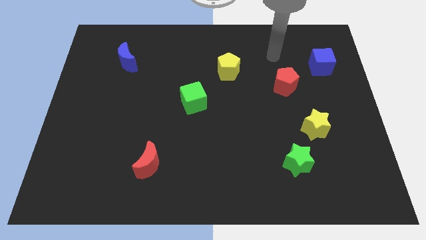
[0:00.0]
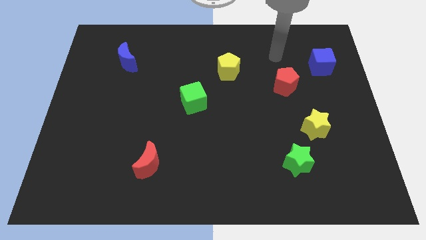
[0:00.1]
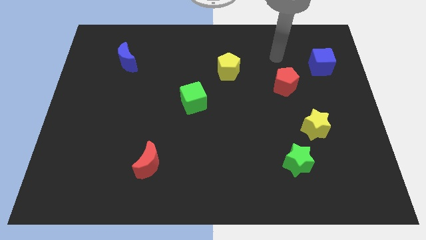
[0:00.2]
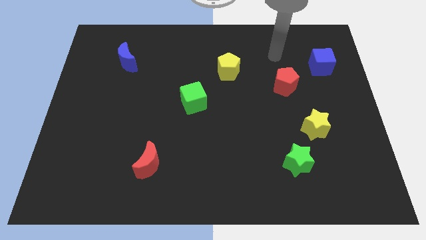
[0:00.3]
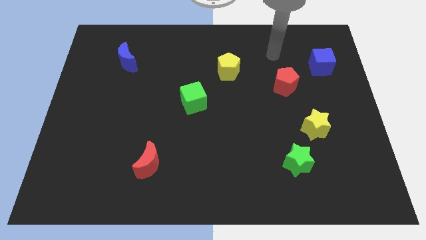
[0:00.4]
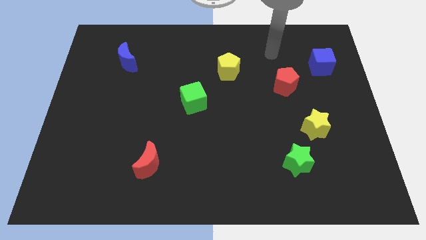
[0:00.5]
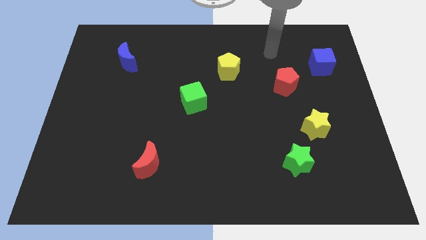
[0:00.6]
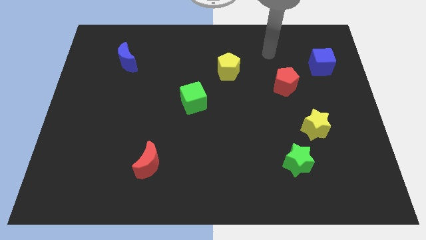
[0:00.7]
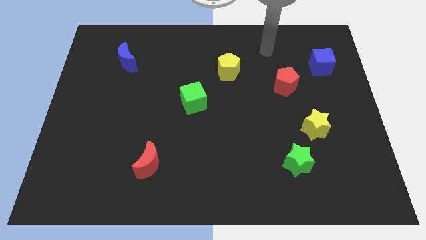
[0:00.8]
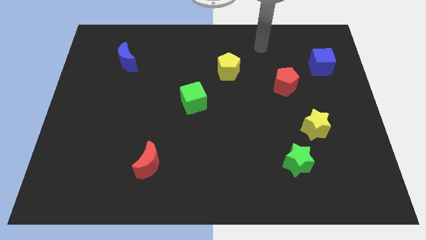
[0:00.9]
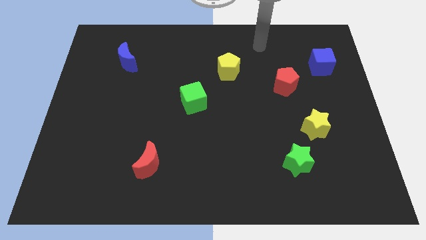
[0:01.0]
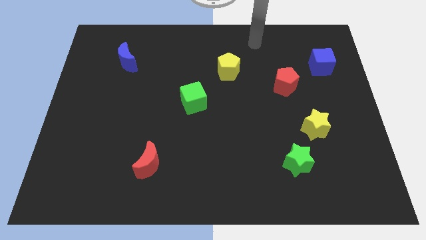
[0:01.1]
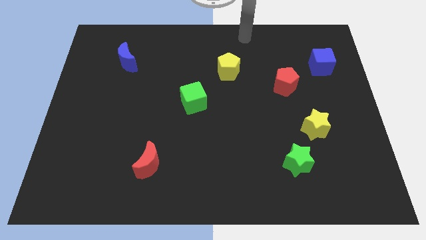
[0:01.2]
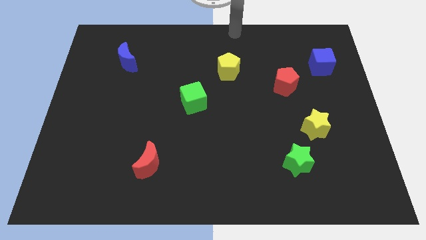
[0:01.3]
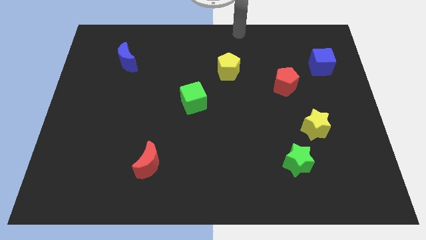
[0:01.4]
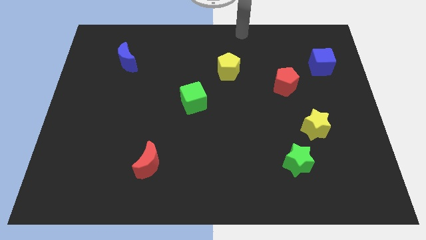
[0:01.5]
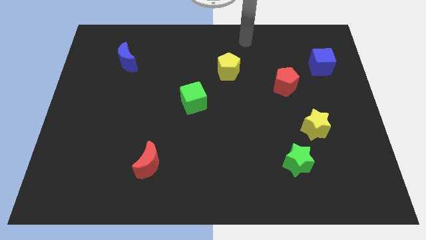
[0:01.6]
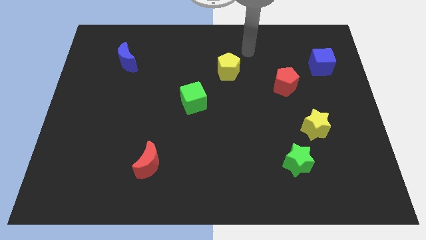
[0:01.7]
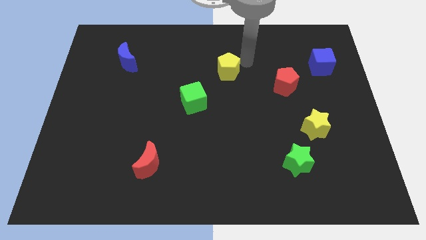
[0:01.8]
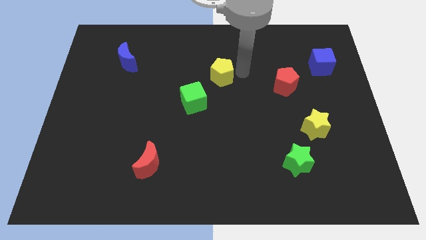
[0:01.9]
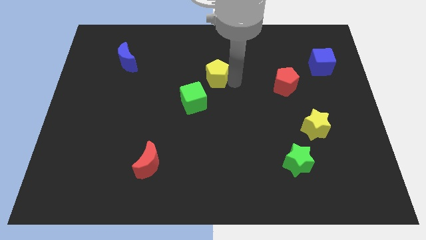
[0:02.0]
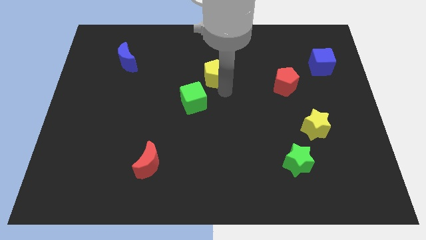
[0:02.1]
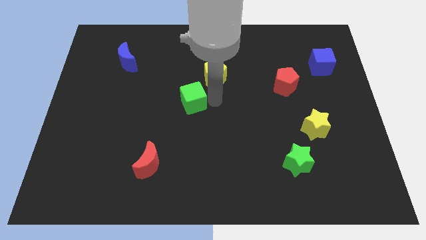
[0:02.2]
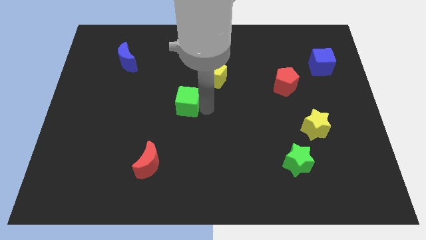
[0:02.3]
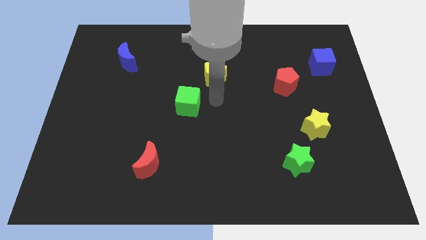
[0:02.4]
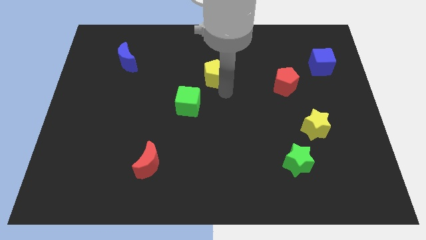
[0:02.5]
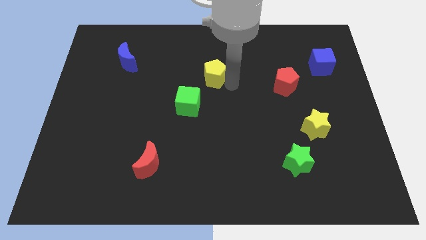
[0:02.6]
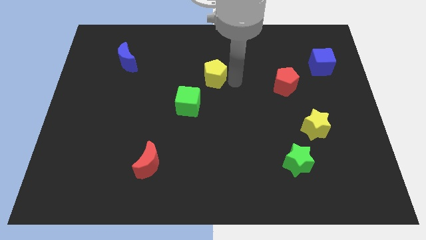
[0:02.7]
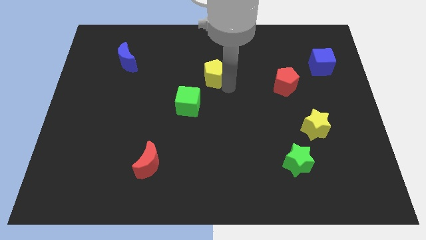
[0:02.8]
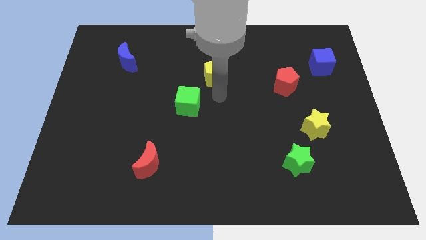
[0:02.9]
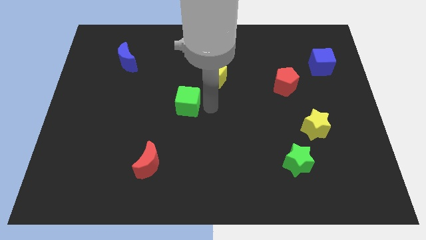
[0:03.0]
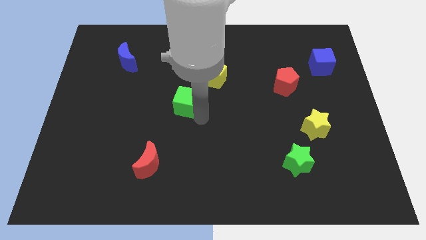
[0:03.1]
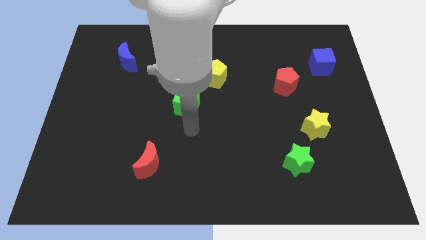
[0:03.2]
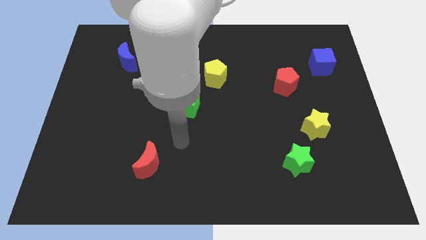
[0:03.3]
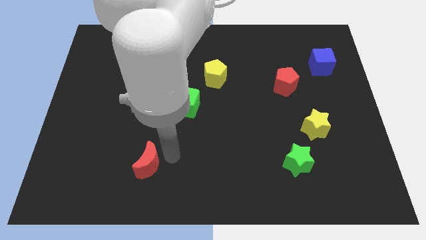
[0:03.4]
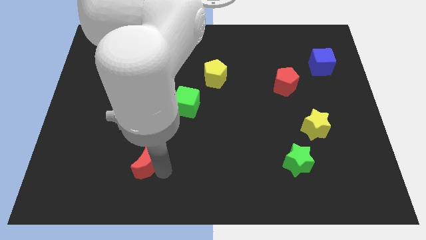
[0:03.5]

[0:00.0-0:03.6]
touch the right of the red moon

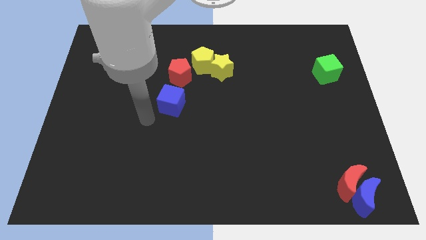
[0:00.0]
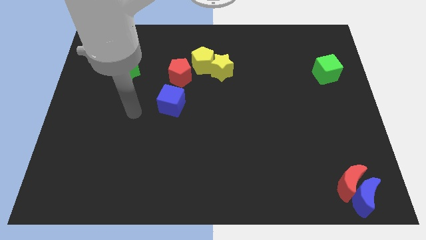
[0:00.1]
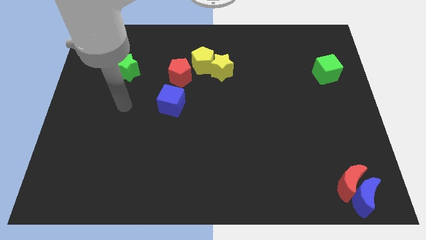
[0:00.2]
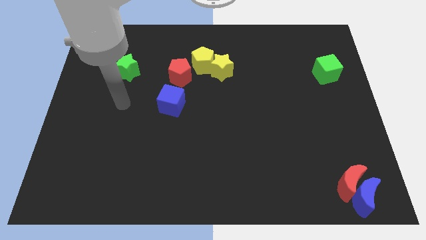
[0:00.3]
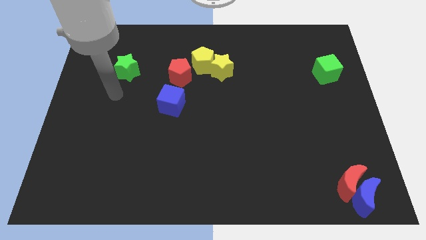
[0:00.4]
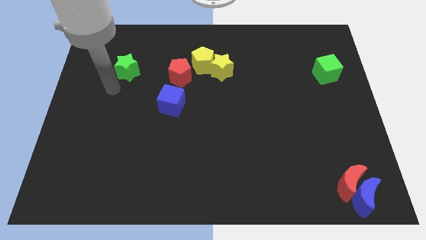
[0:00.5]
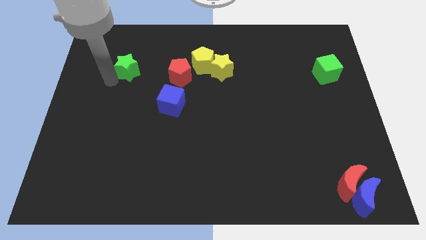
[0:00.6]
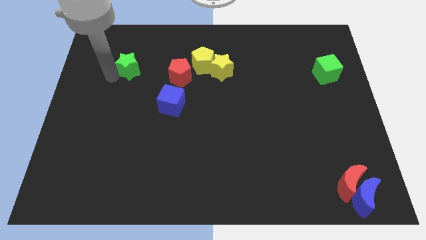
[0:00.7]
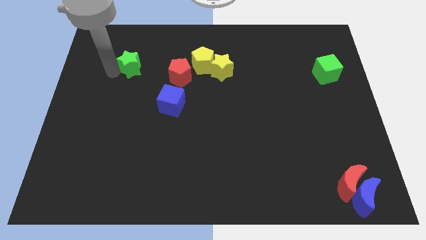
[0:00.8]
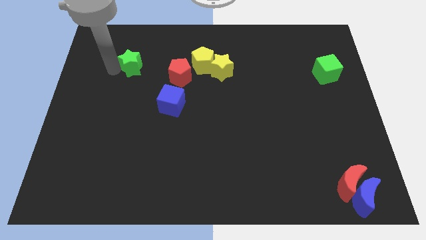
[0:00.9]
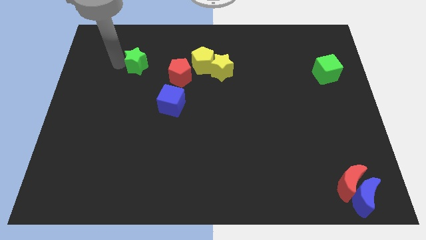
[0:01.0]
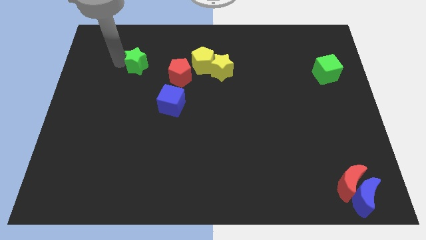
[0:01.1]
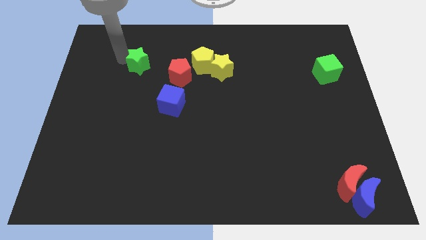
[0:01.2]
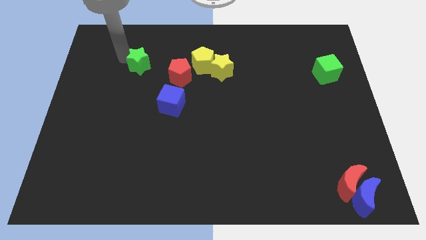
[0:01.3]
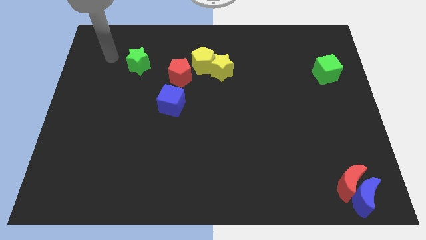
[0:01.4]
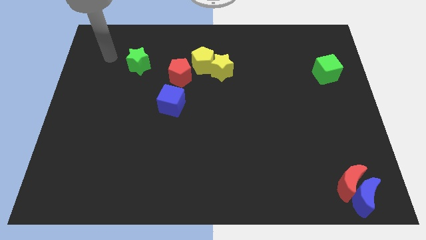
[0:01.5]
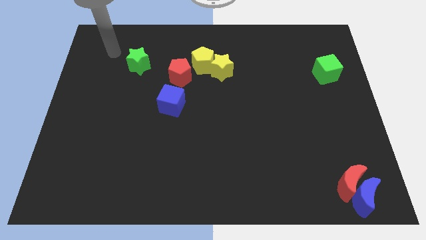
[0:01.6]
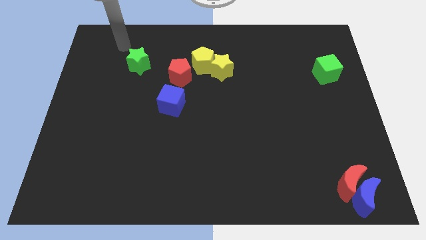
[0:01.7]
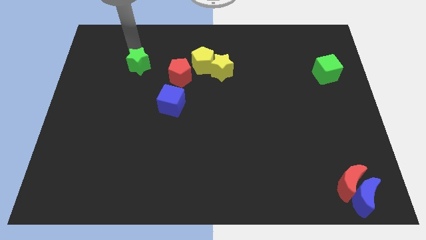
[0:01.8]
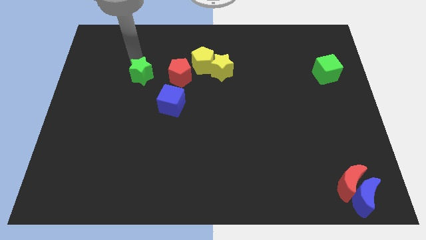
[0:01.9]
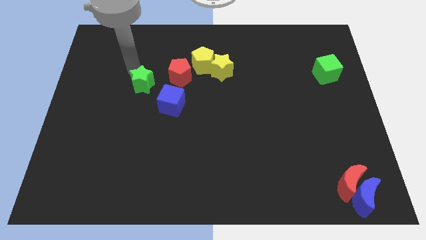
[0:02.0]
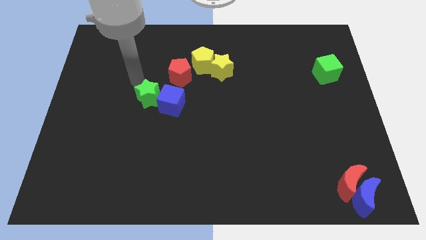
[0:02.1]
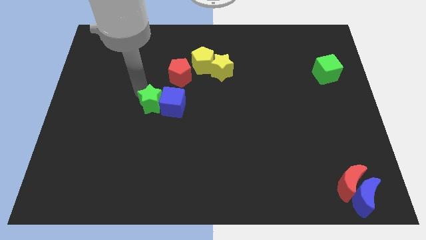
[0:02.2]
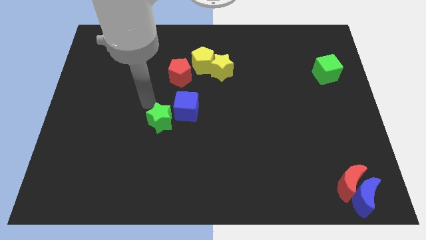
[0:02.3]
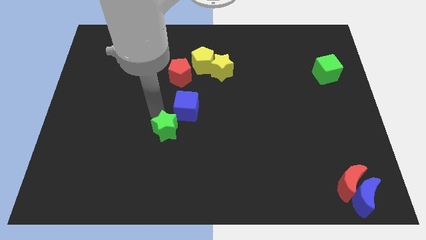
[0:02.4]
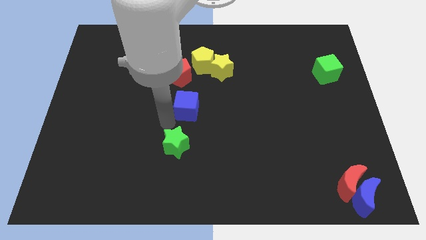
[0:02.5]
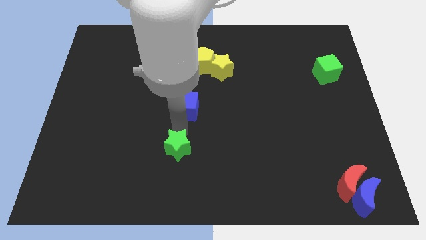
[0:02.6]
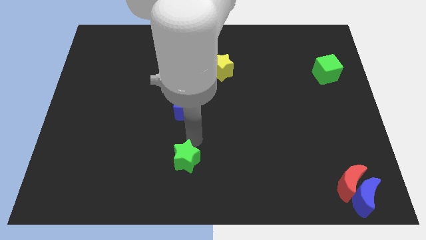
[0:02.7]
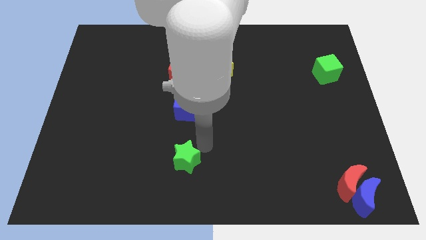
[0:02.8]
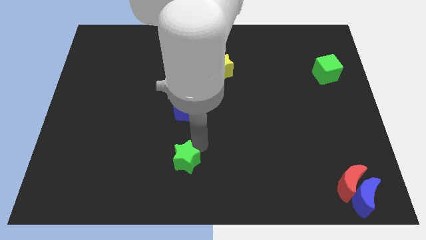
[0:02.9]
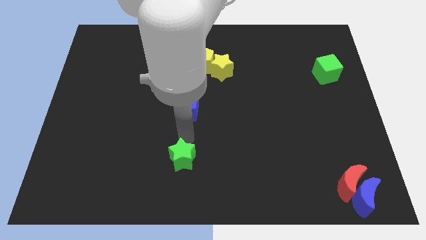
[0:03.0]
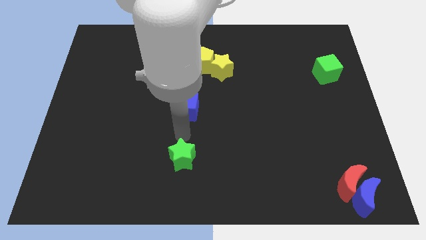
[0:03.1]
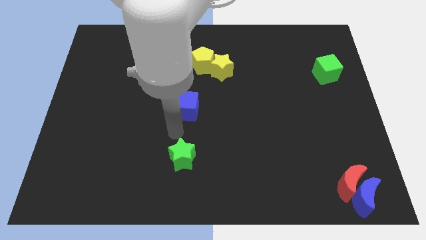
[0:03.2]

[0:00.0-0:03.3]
place the green star vertically below the blue cube

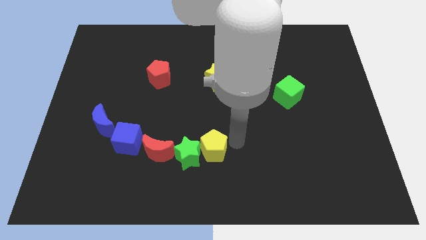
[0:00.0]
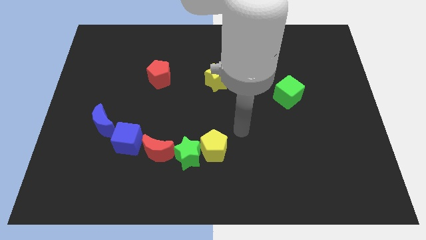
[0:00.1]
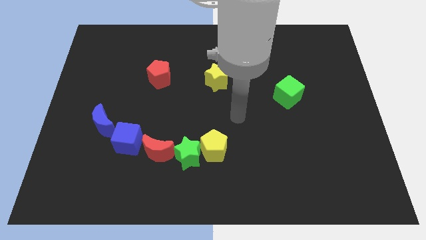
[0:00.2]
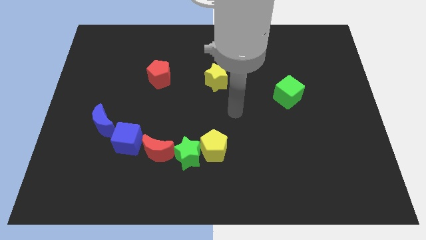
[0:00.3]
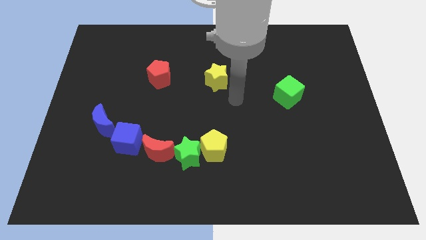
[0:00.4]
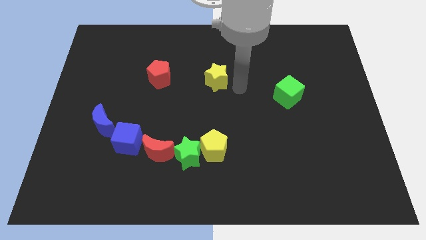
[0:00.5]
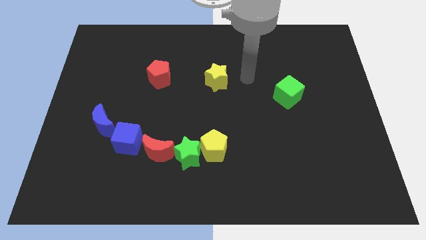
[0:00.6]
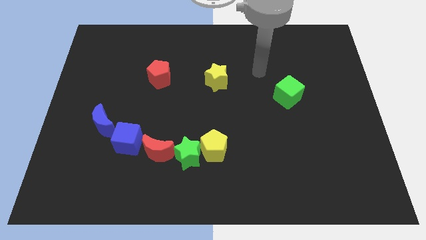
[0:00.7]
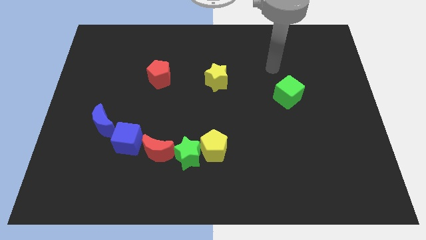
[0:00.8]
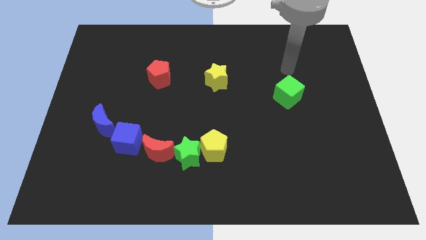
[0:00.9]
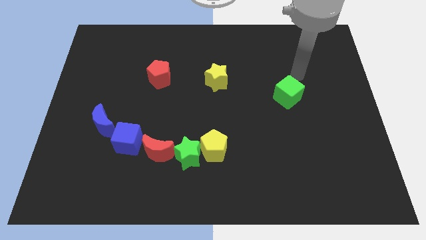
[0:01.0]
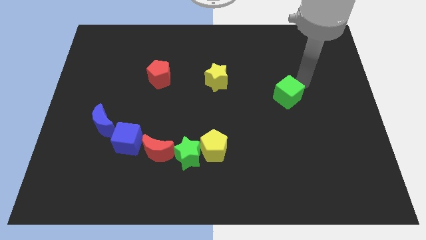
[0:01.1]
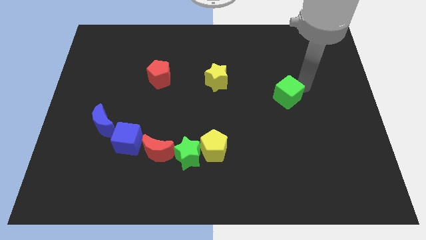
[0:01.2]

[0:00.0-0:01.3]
point your arm at the top right side of green cube

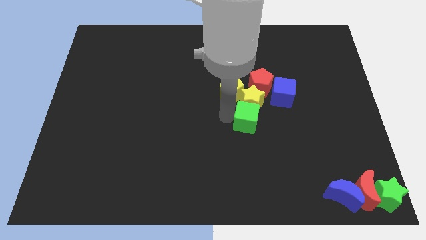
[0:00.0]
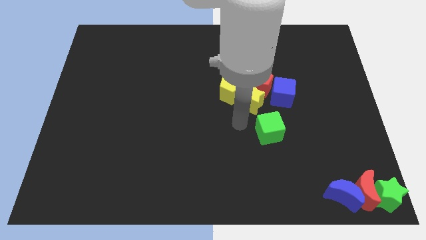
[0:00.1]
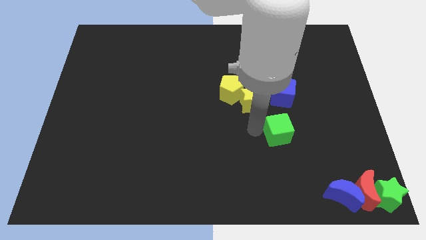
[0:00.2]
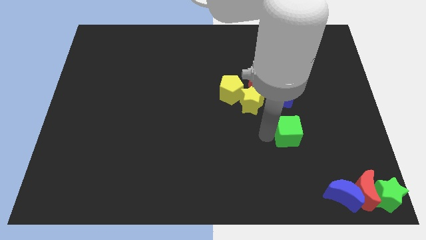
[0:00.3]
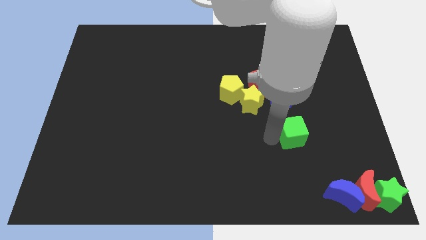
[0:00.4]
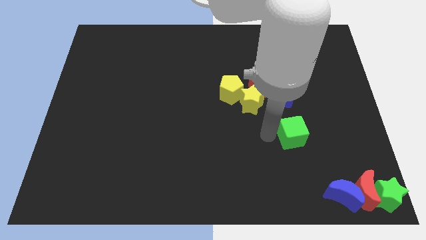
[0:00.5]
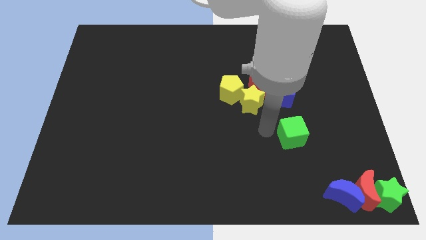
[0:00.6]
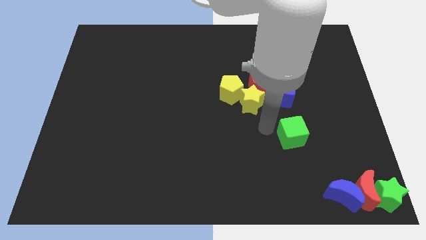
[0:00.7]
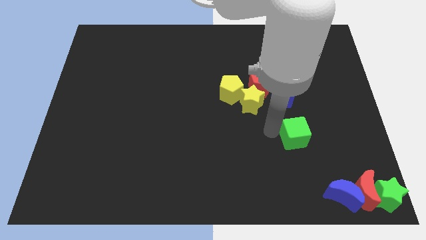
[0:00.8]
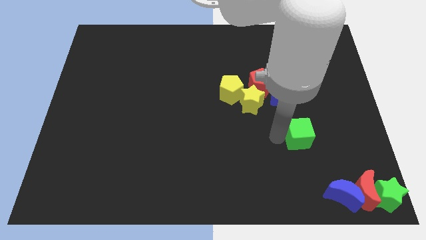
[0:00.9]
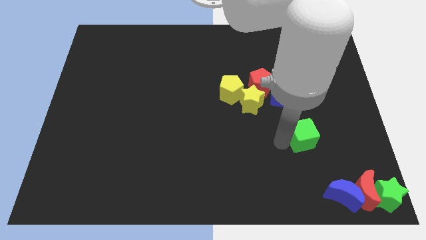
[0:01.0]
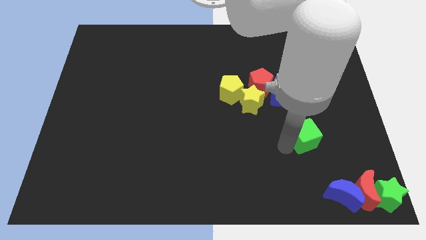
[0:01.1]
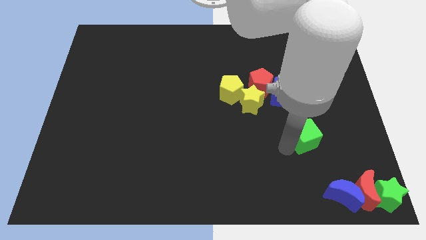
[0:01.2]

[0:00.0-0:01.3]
separate green cube from yellow star
